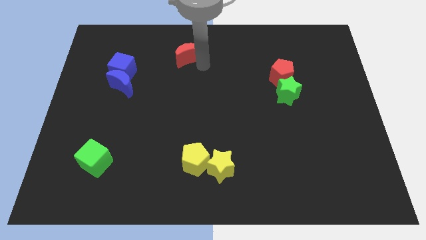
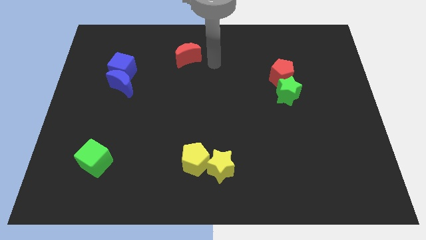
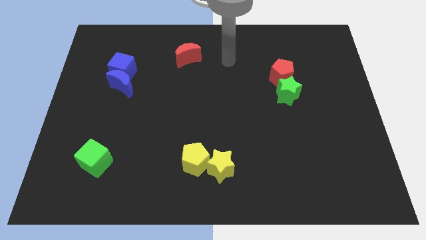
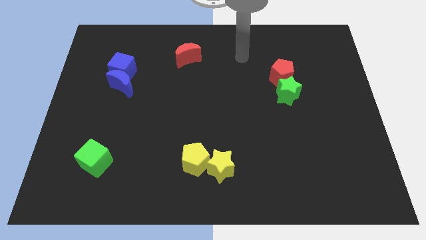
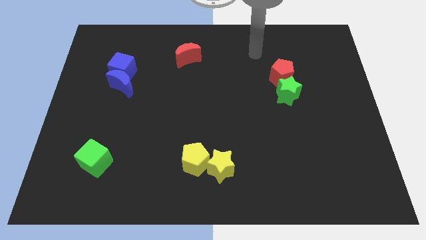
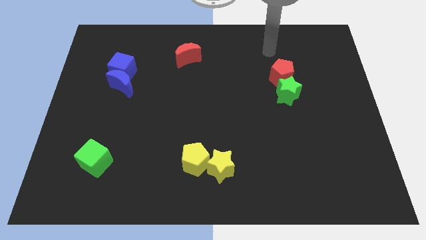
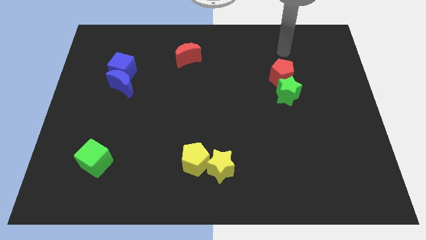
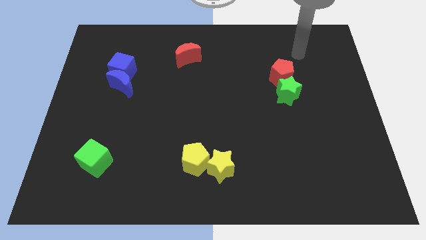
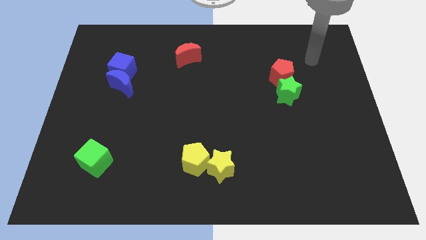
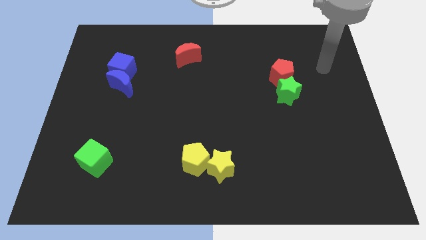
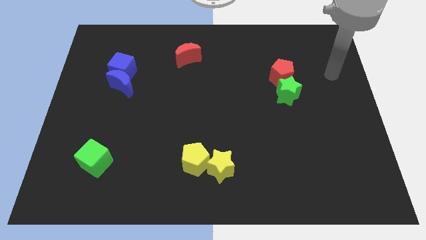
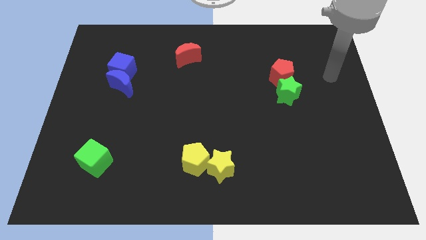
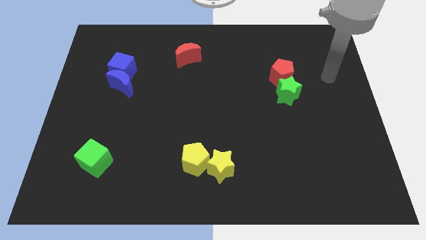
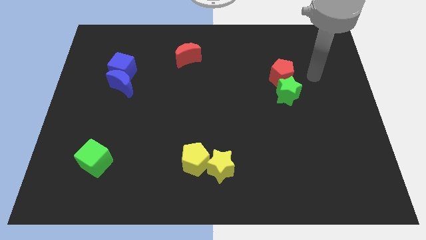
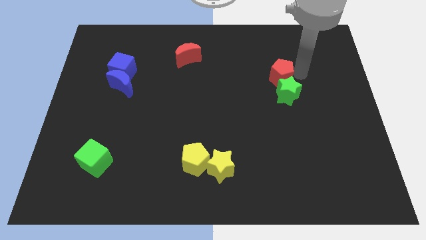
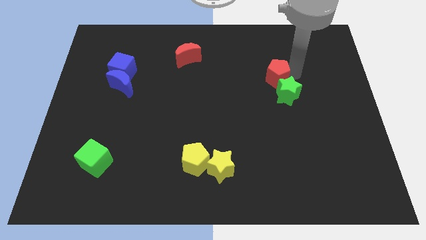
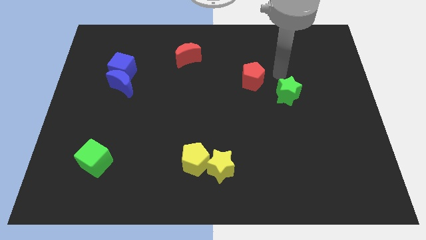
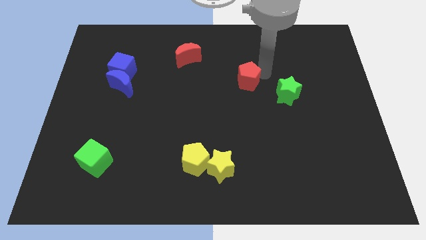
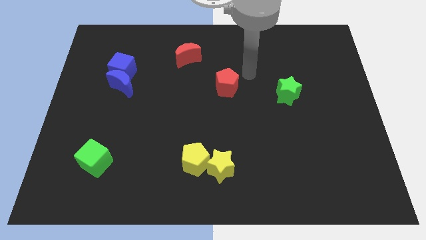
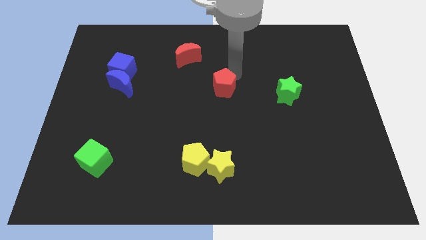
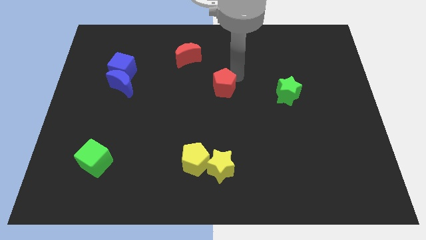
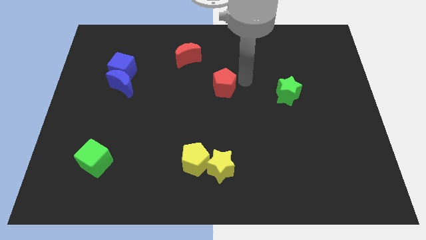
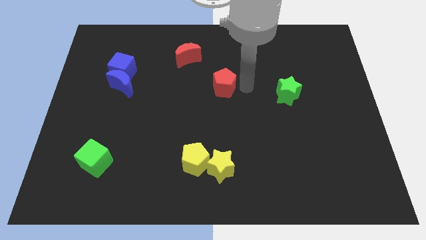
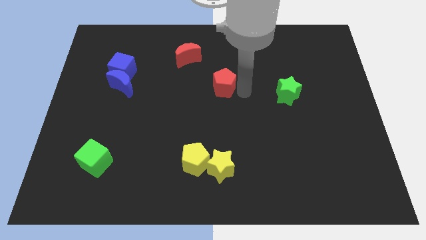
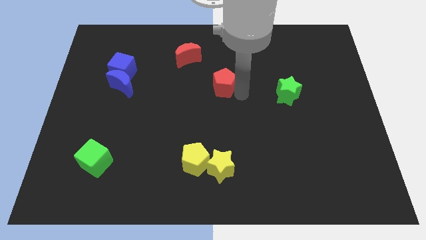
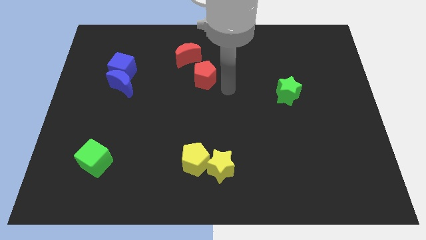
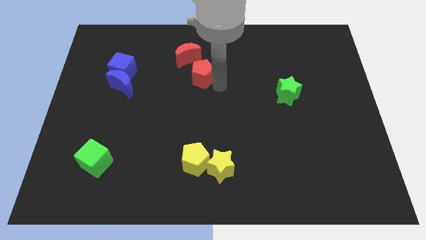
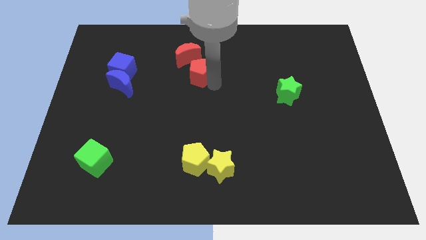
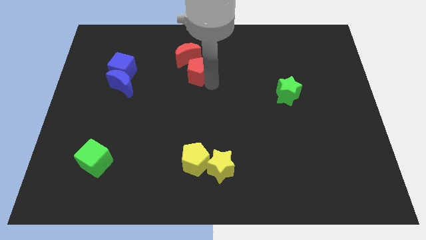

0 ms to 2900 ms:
move the red pentagon towards the red crescent

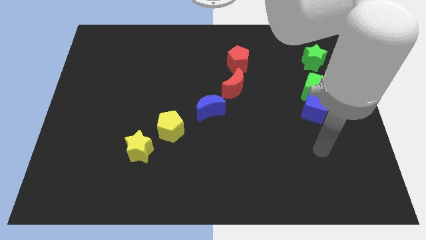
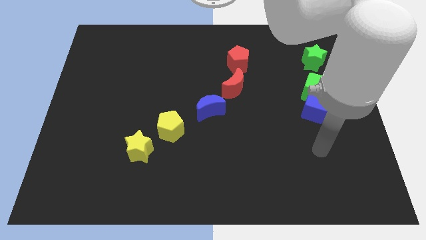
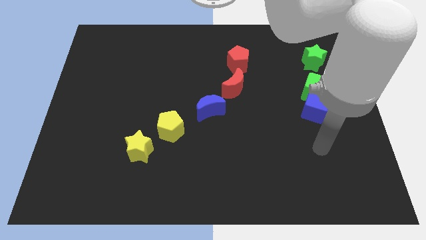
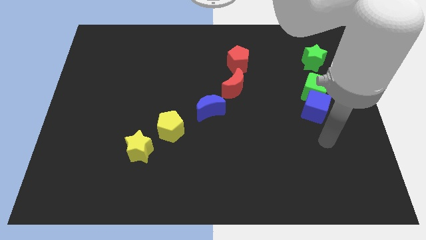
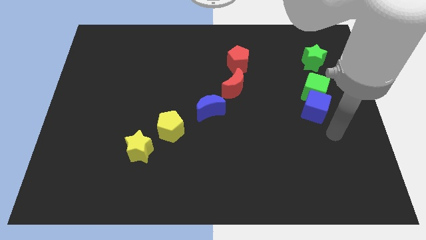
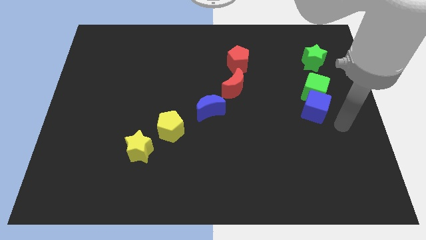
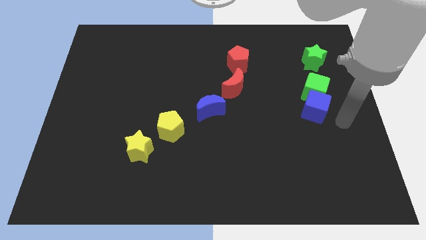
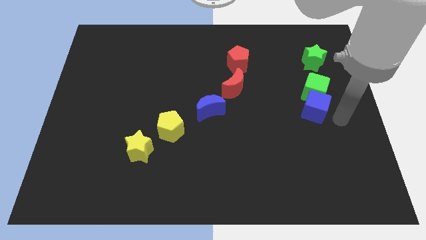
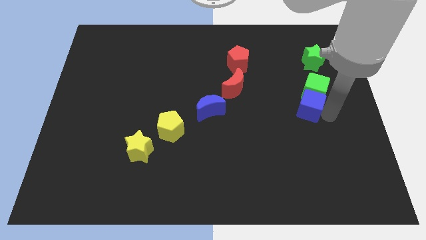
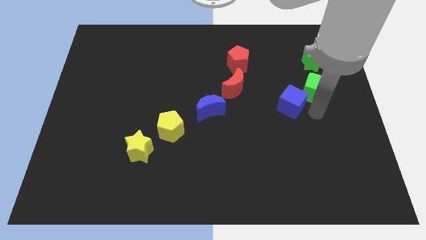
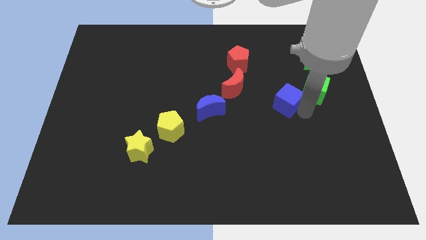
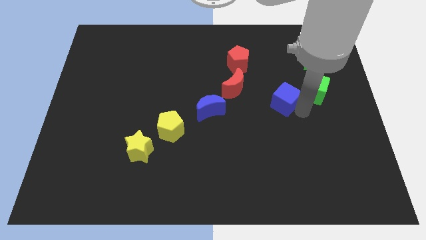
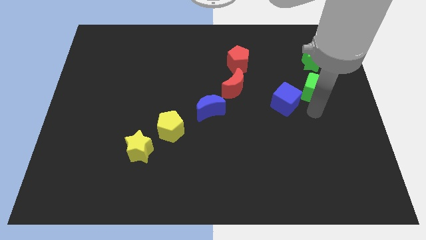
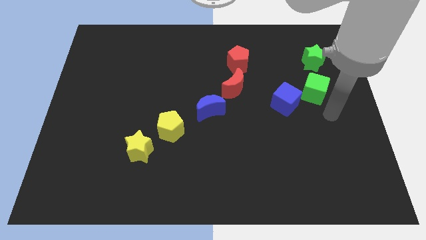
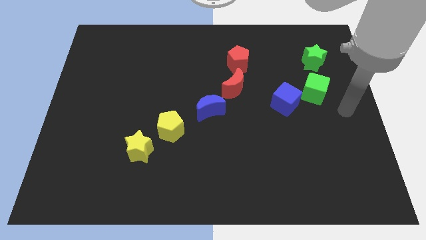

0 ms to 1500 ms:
slide the blue cube at the bottom left of the green cube

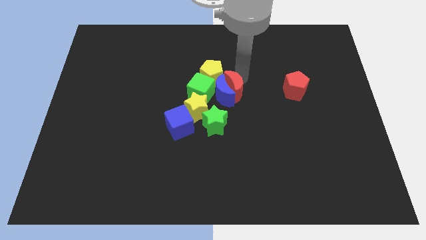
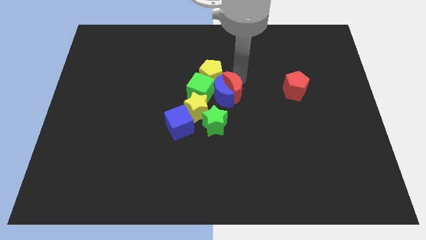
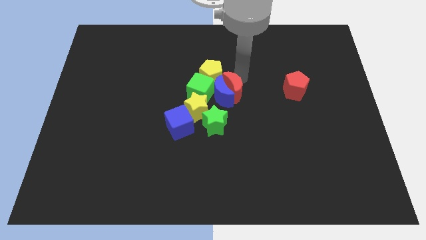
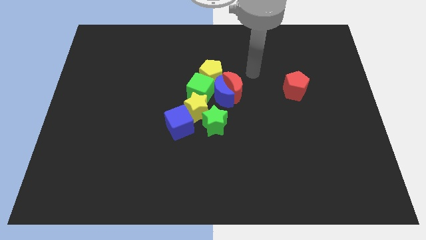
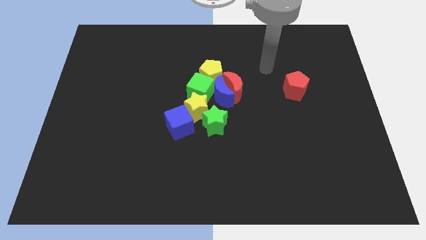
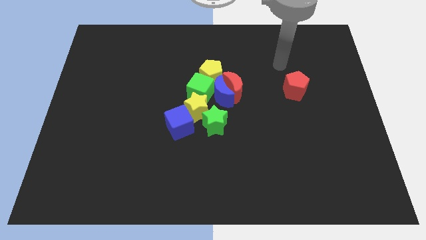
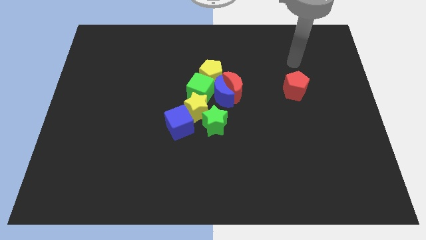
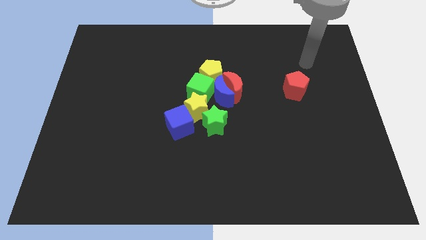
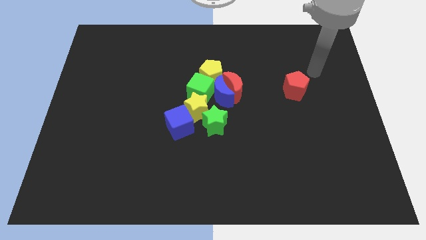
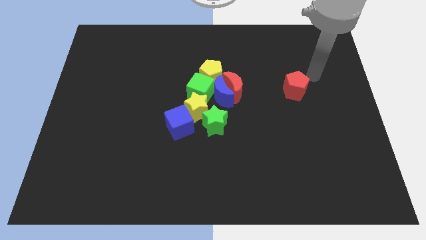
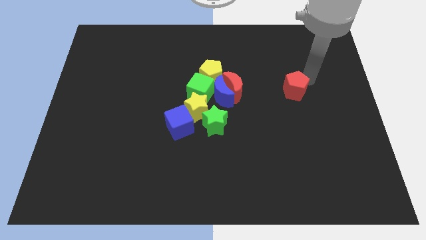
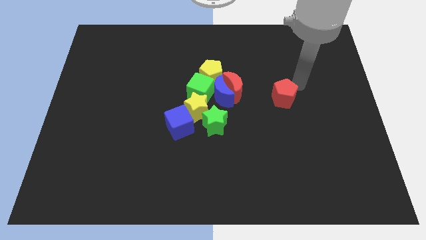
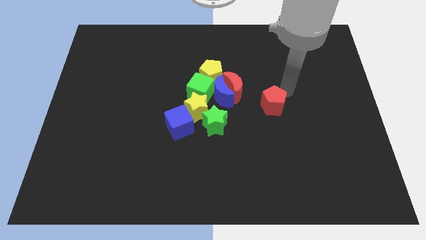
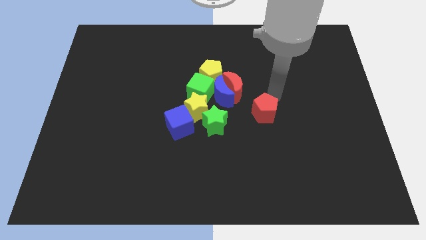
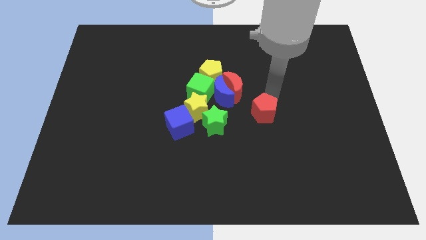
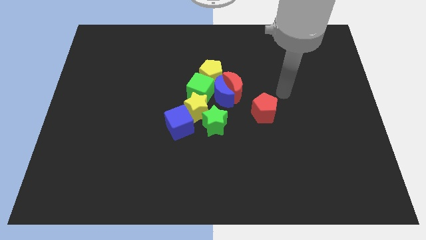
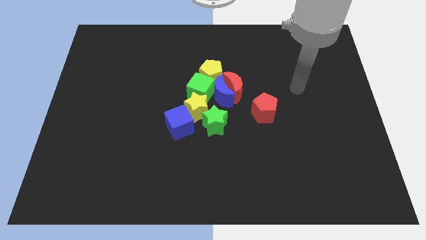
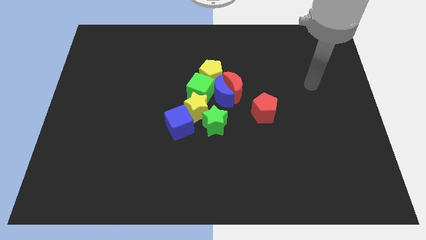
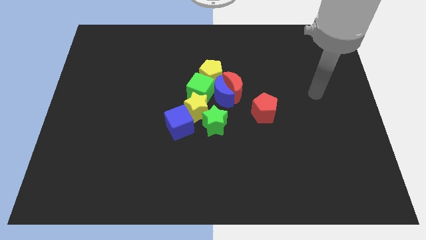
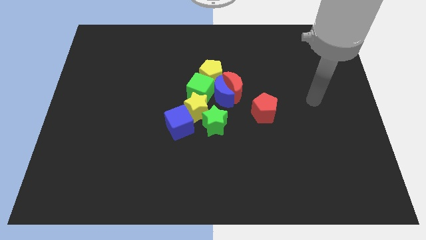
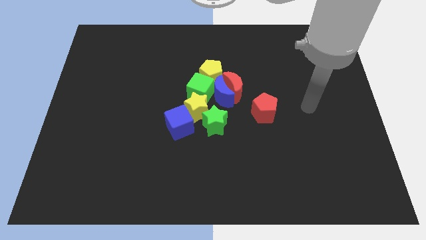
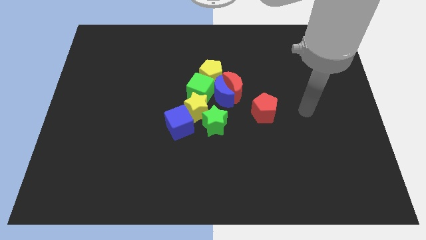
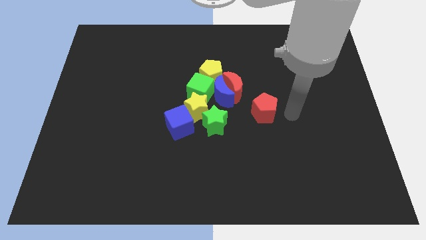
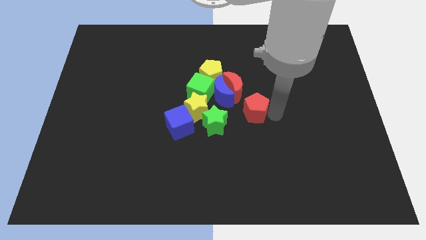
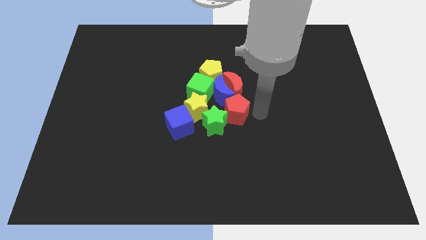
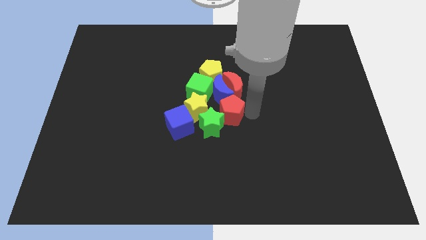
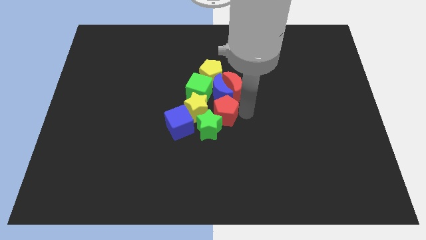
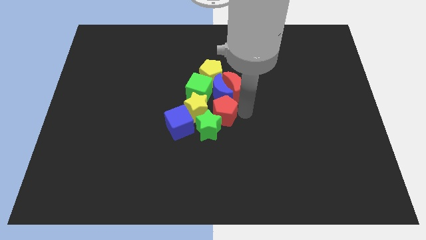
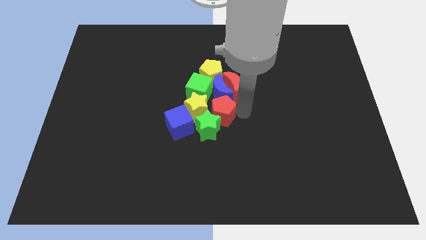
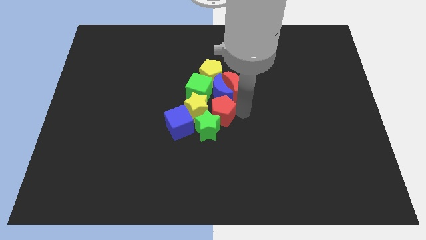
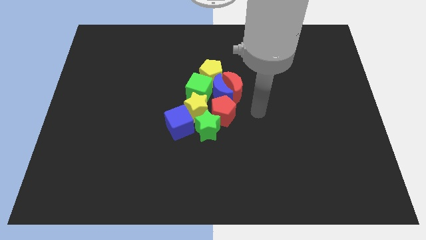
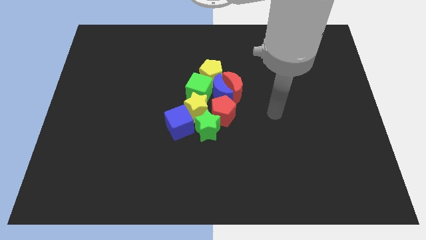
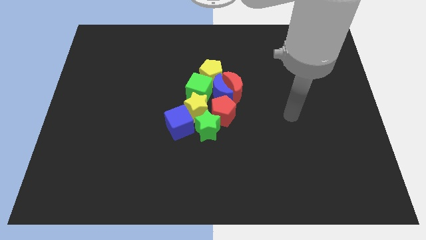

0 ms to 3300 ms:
move the red pentagon into the group of blocks

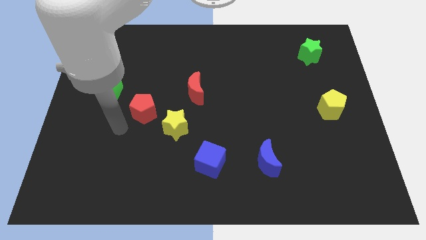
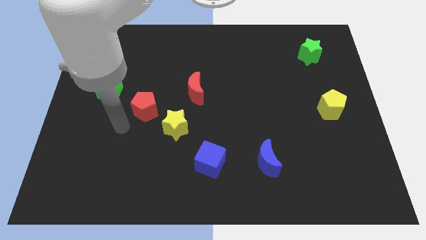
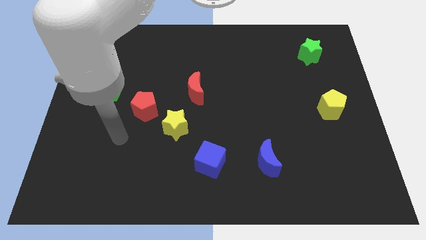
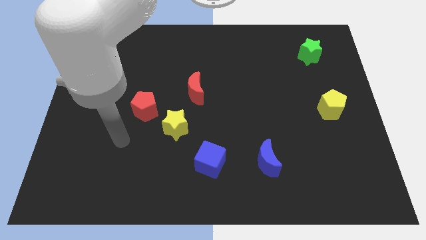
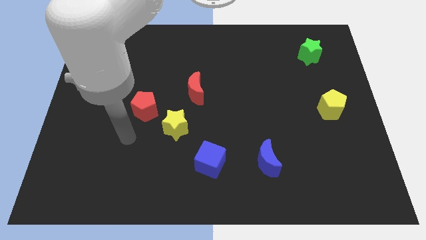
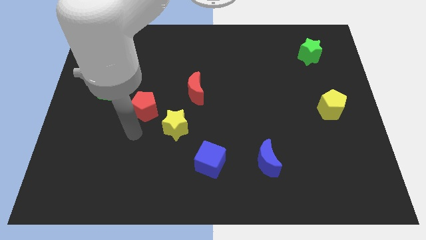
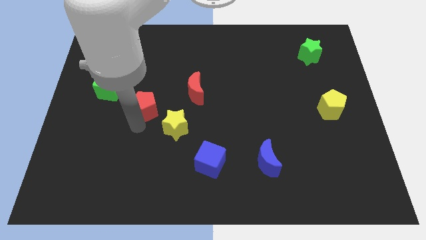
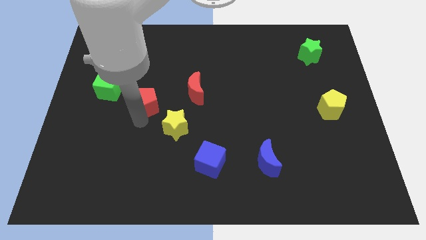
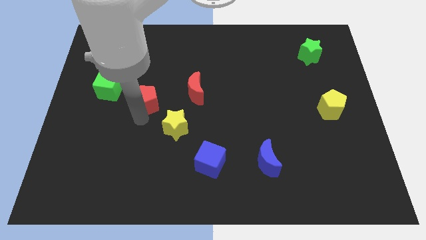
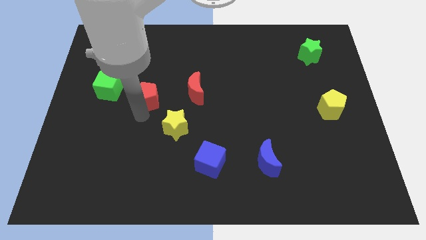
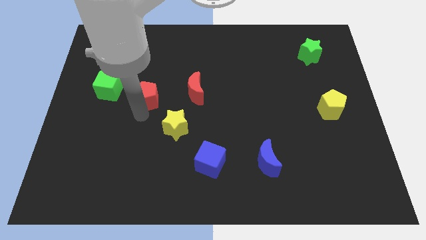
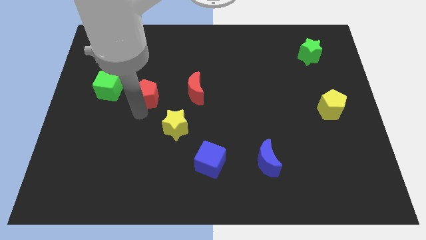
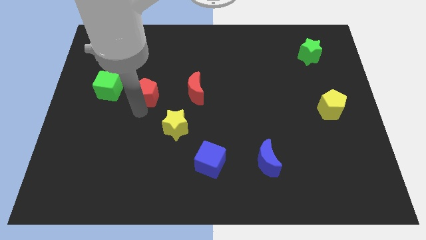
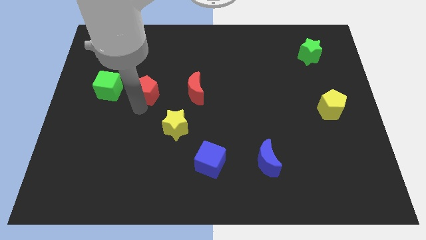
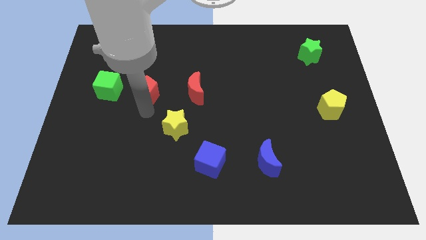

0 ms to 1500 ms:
place the red pentagon right to the green cube

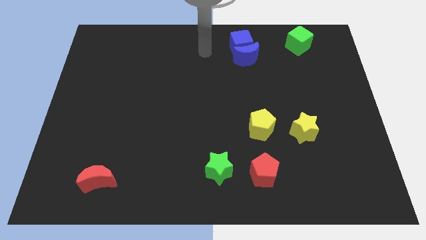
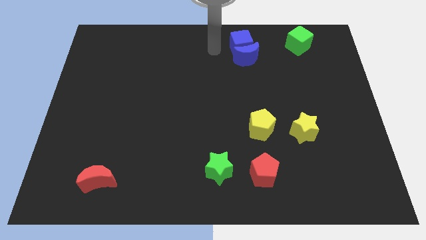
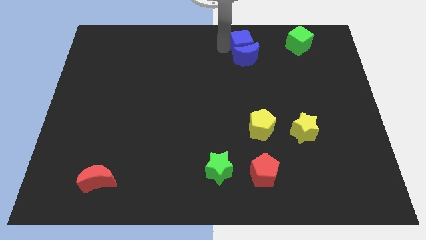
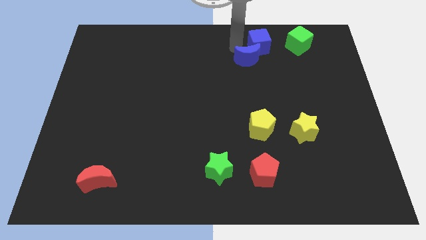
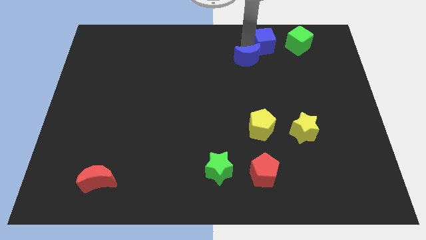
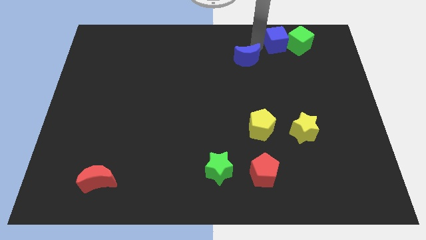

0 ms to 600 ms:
move the blue cube to the left of green cube
